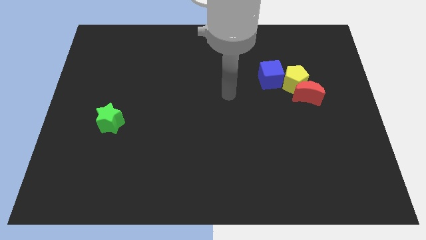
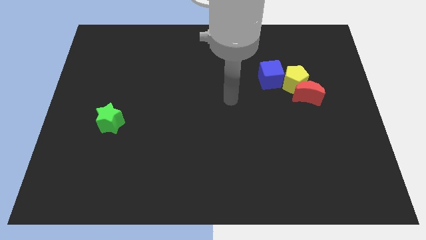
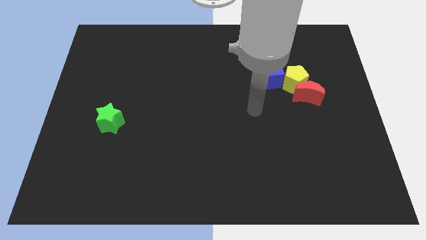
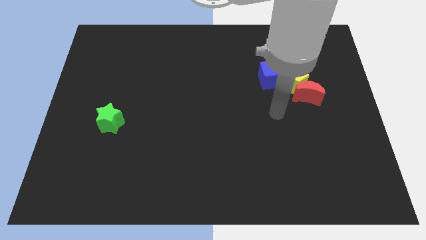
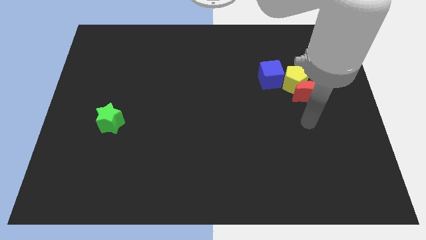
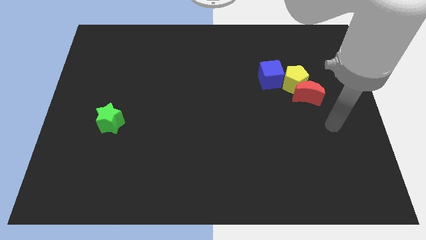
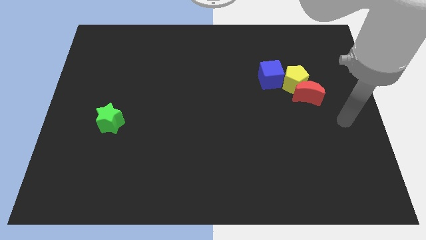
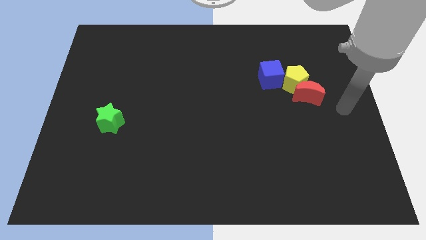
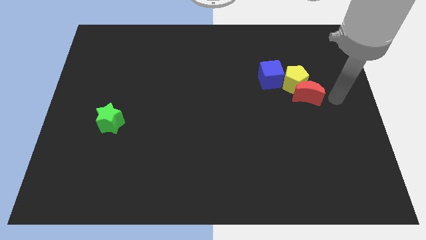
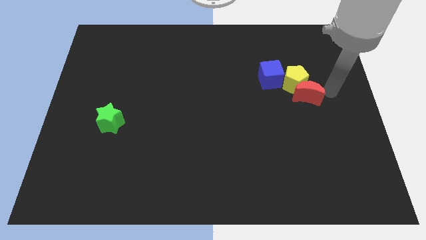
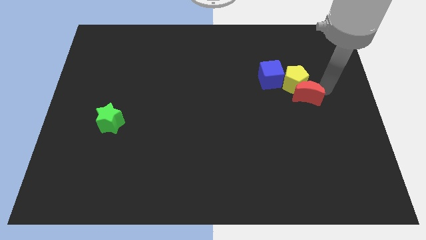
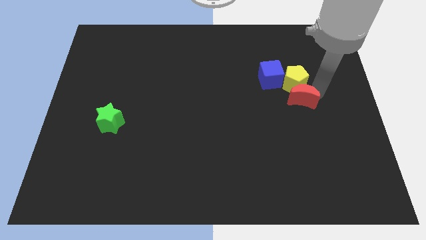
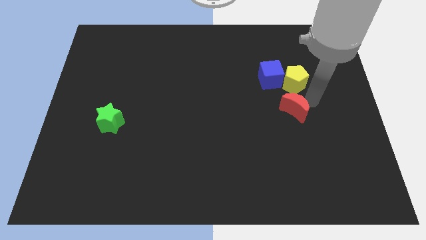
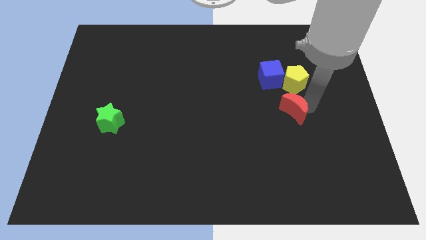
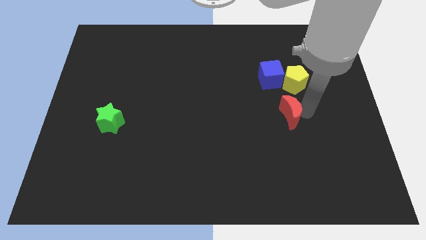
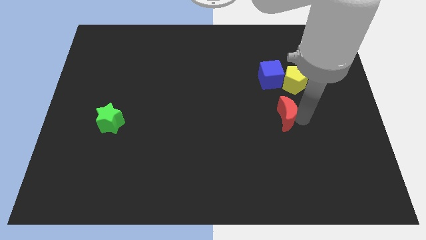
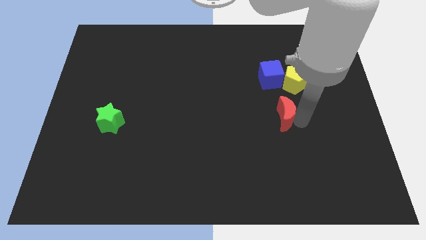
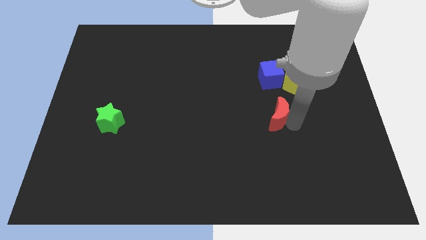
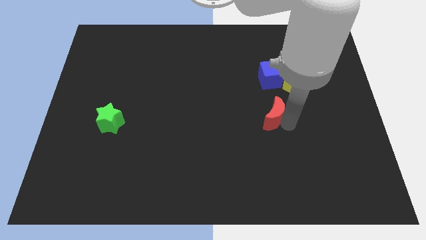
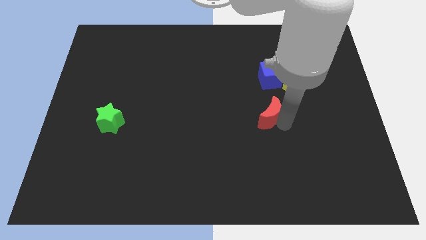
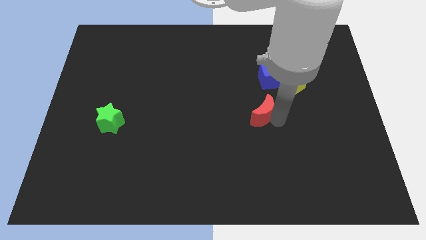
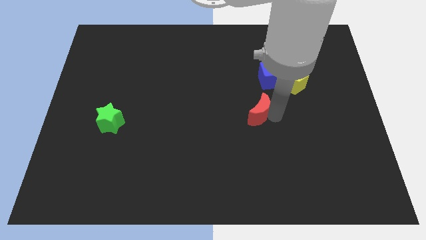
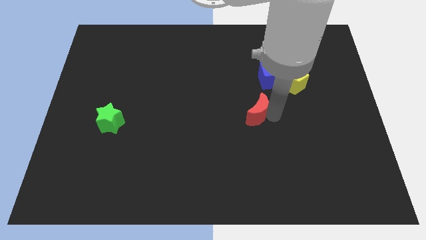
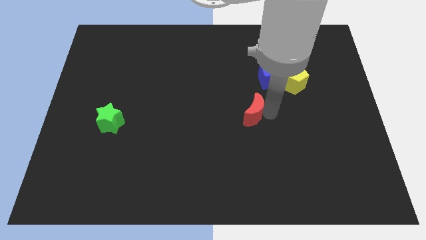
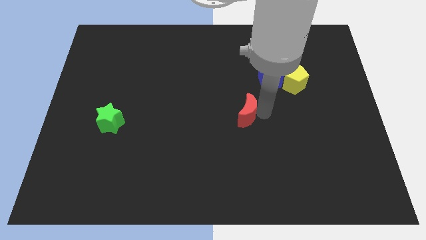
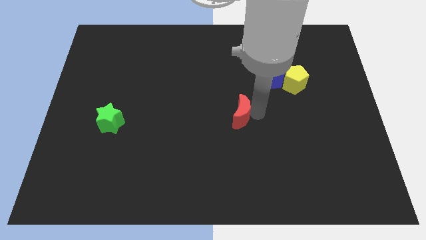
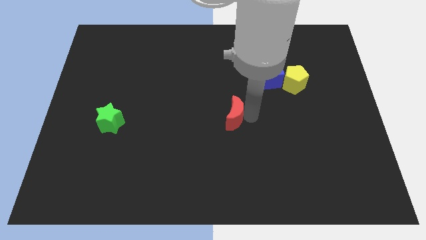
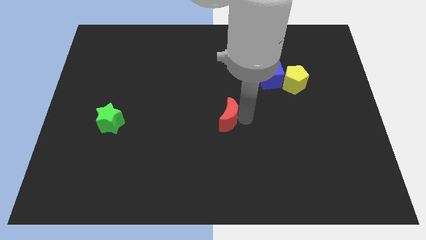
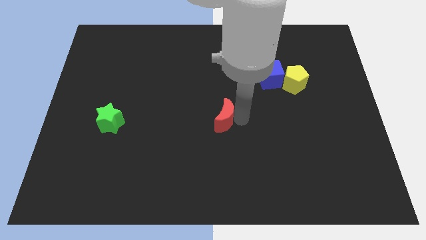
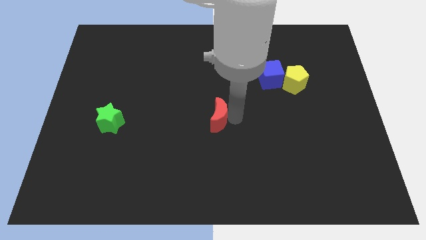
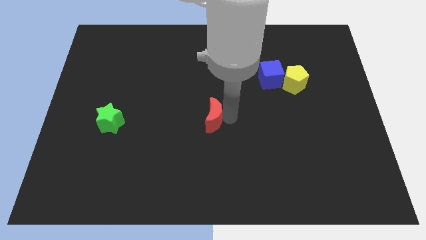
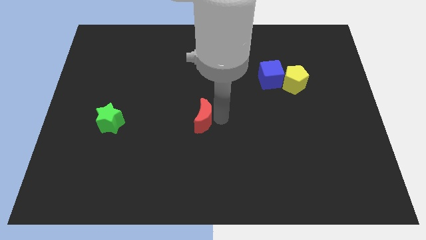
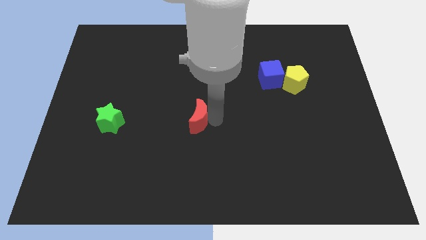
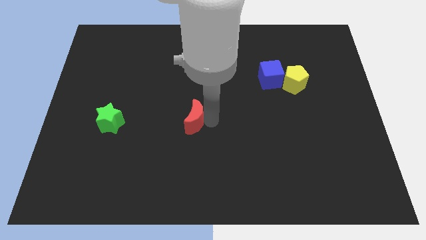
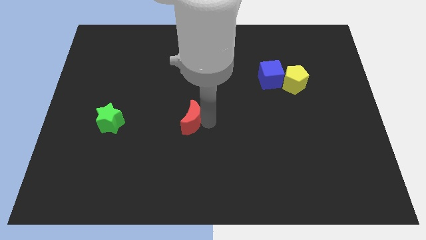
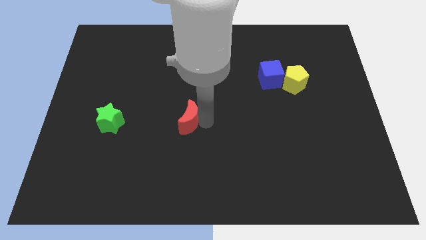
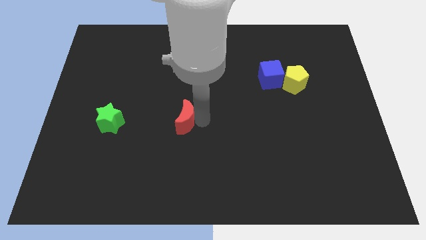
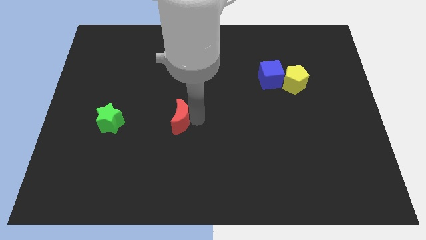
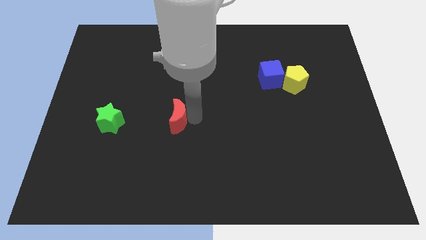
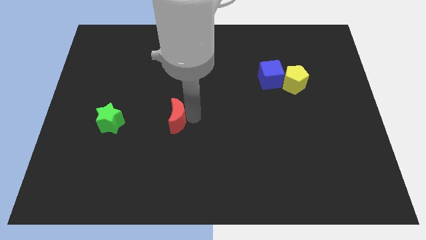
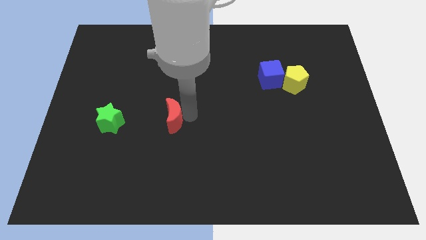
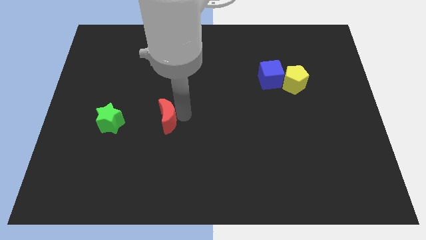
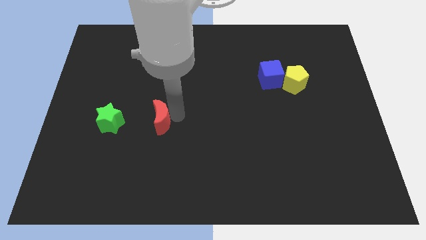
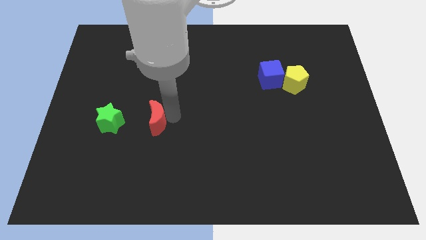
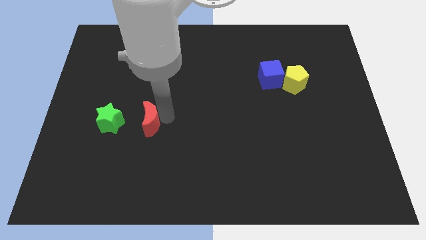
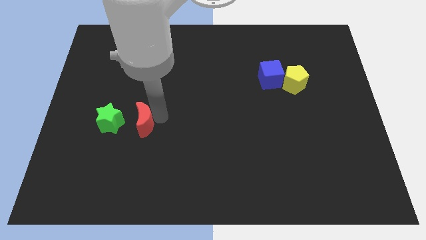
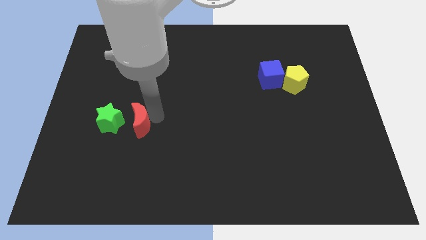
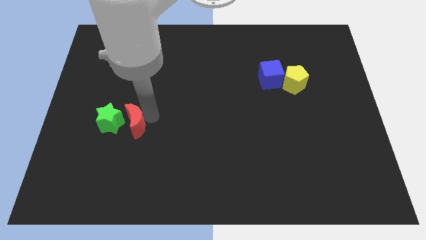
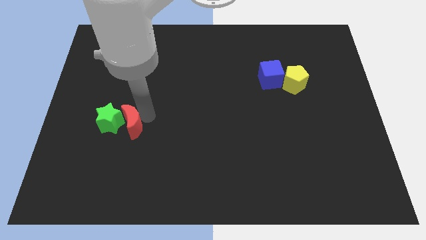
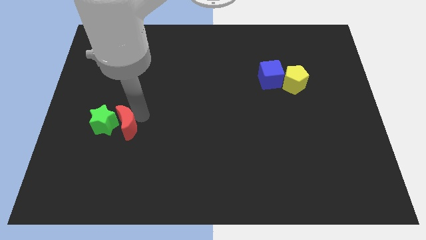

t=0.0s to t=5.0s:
put the red block close to the green star

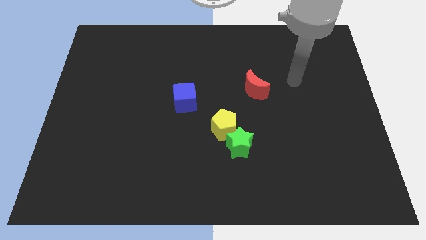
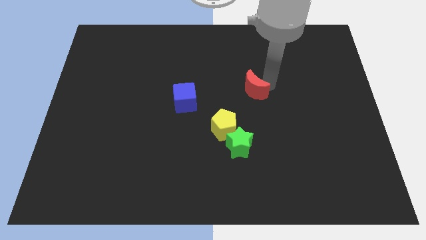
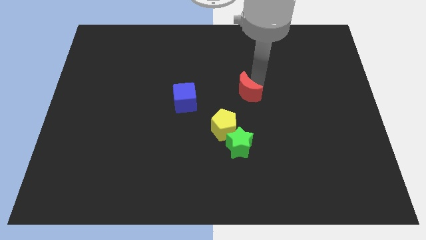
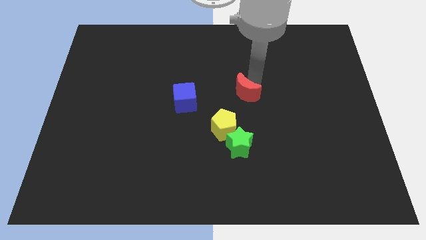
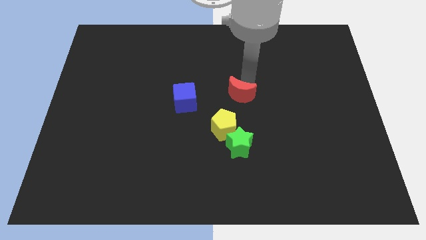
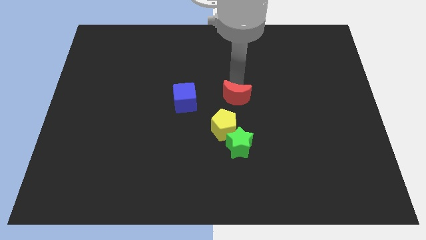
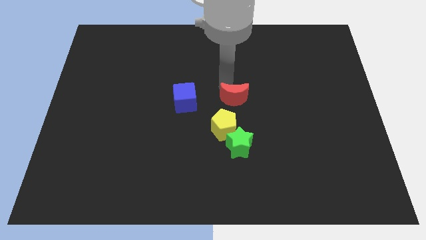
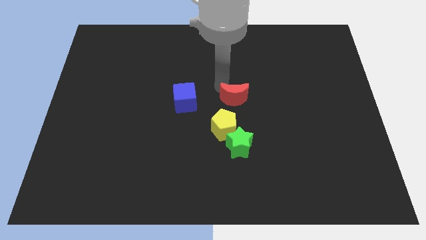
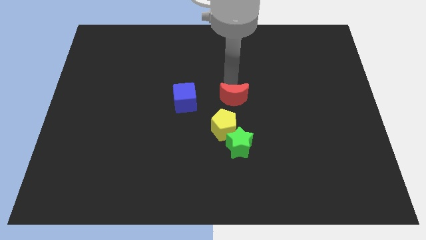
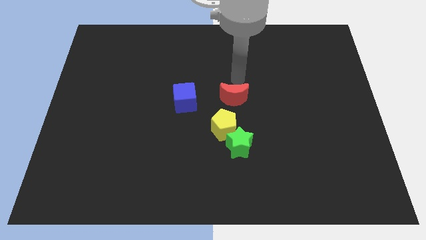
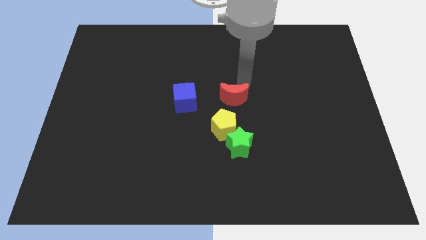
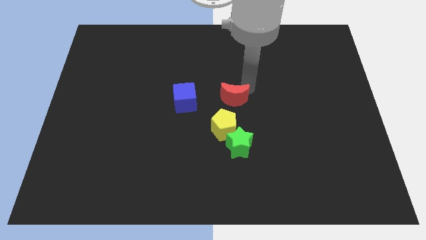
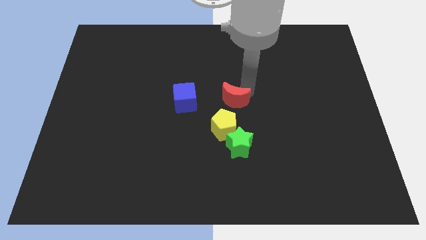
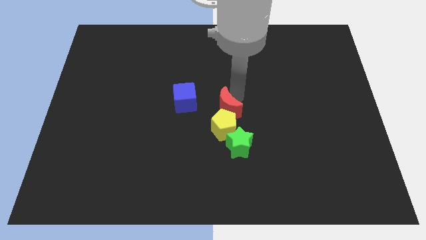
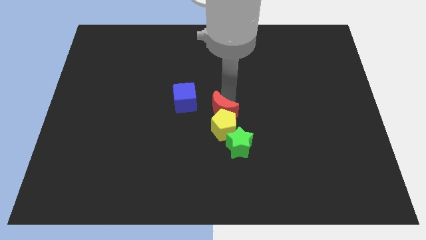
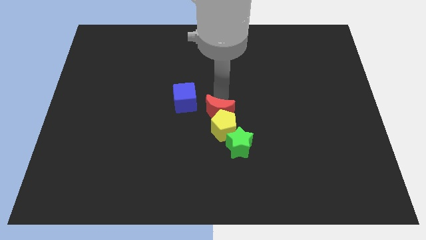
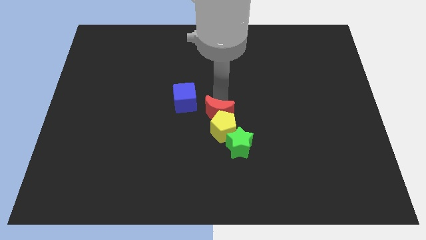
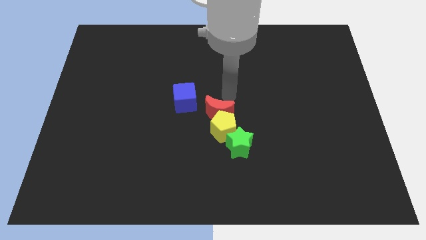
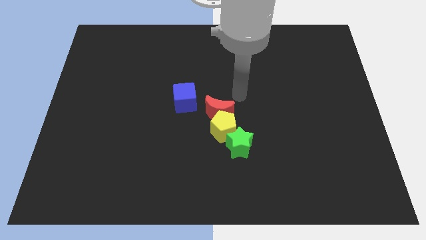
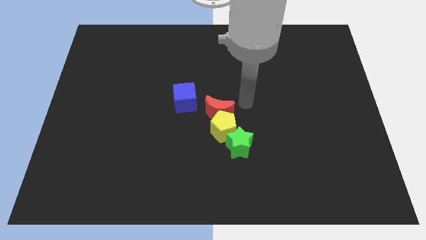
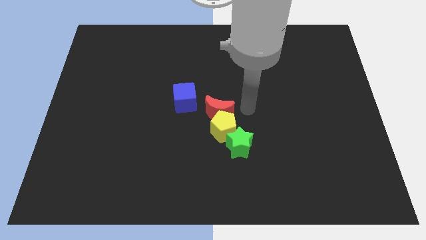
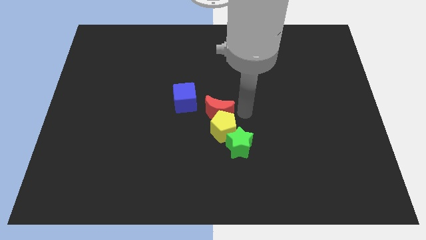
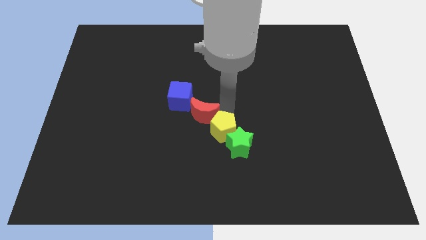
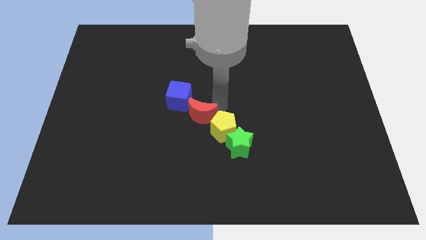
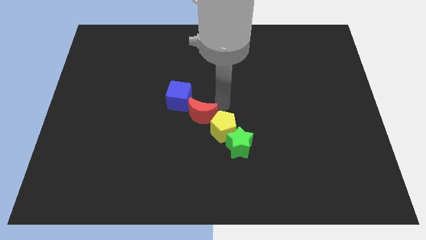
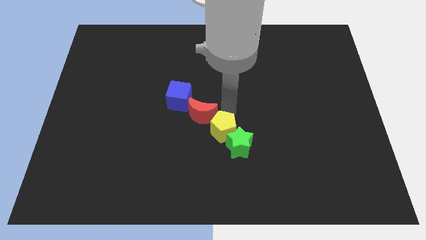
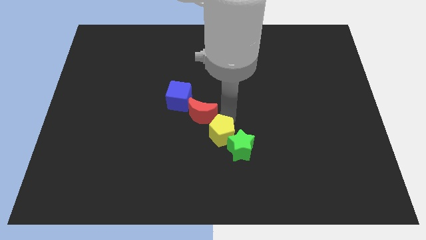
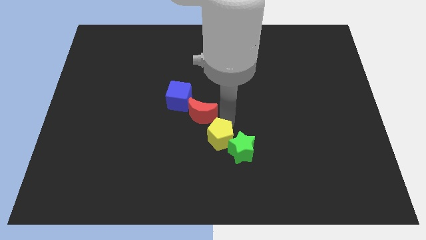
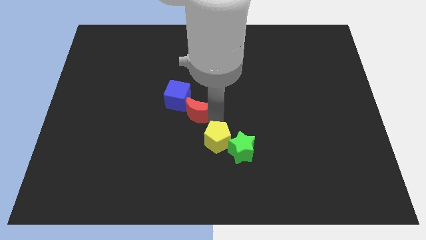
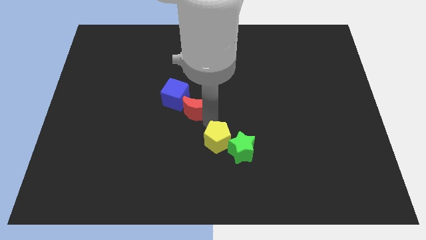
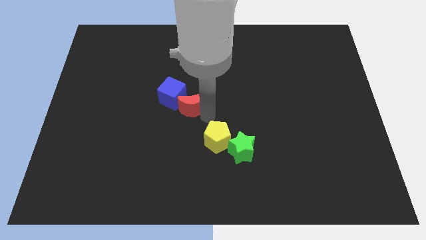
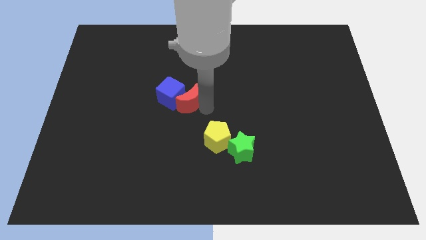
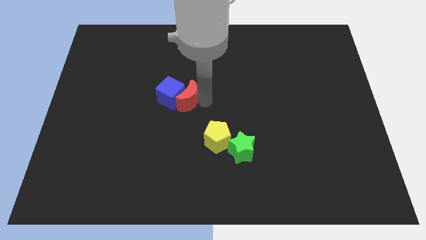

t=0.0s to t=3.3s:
push the moon close to the blue cube
